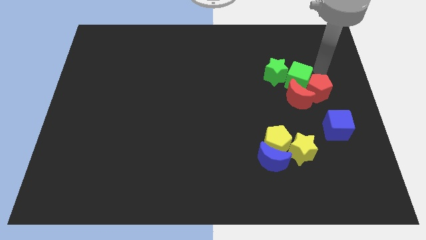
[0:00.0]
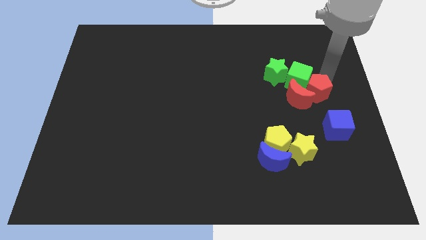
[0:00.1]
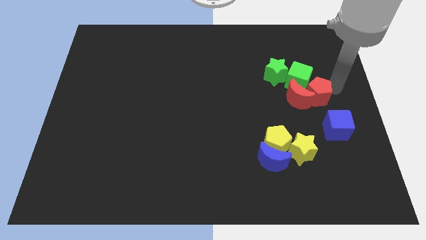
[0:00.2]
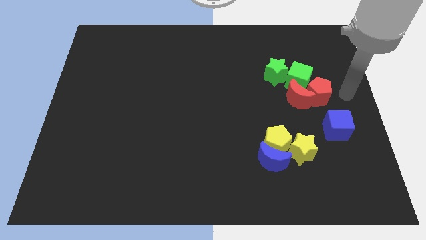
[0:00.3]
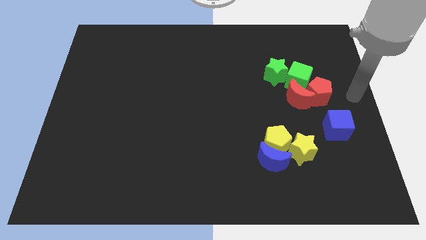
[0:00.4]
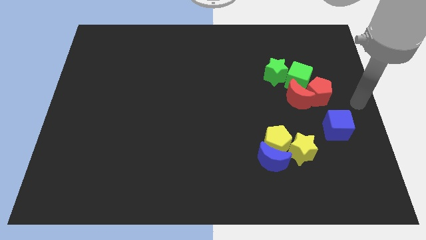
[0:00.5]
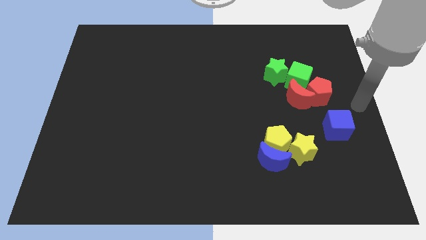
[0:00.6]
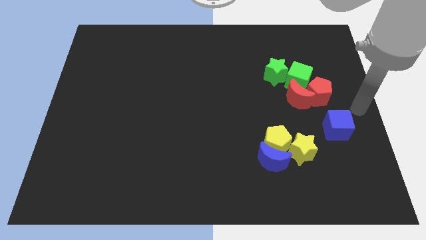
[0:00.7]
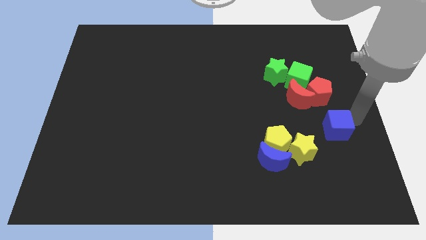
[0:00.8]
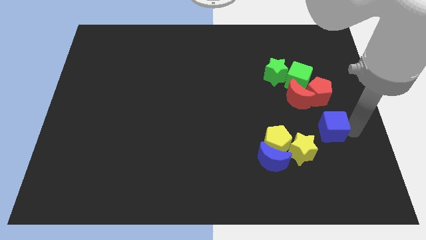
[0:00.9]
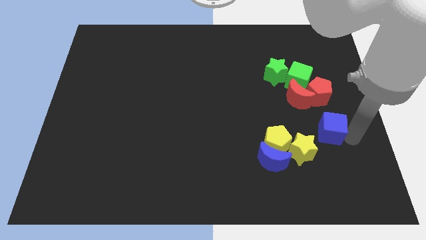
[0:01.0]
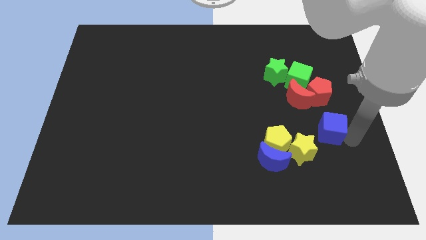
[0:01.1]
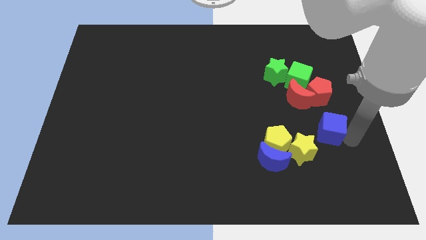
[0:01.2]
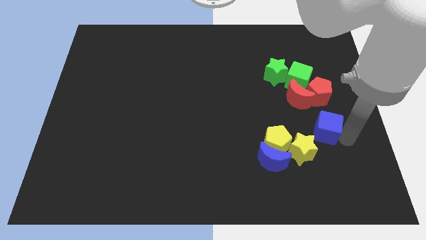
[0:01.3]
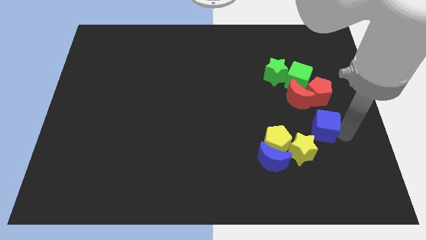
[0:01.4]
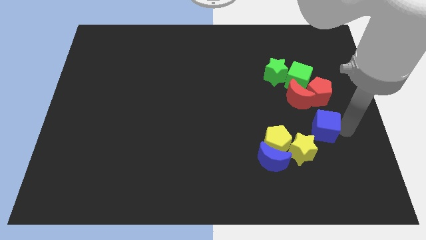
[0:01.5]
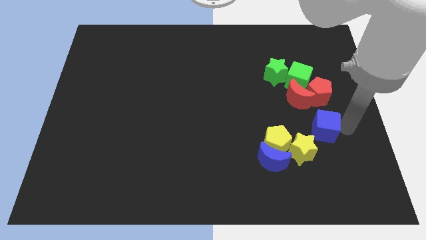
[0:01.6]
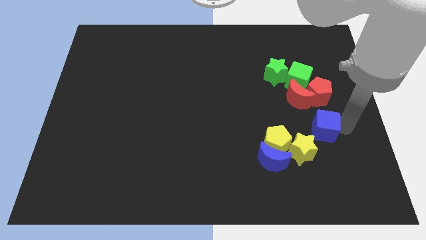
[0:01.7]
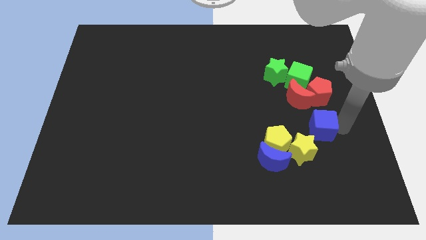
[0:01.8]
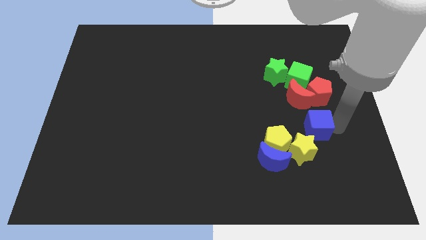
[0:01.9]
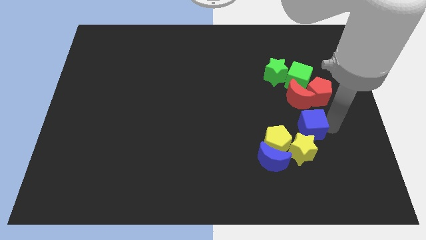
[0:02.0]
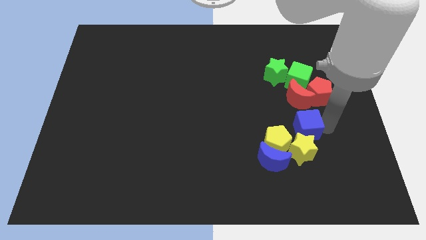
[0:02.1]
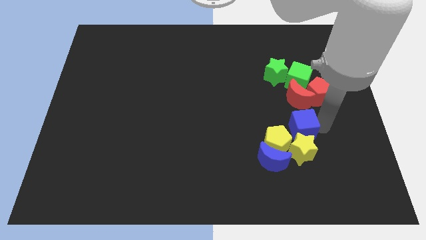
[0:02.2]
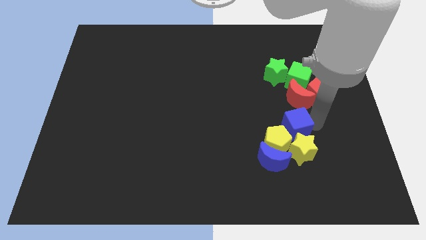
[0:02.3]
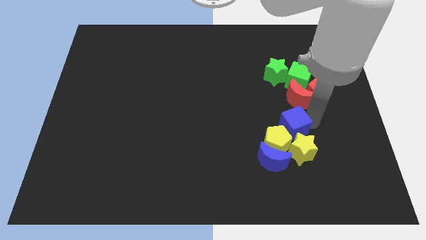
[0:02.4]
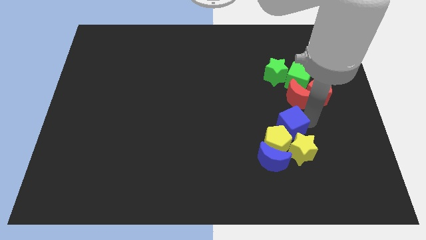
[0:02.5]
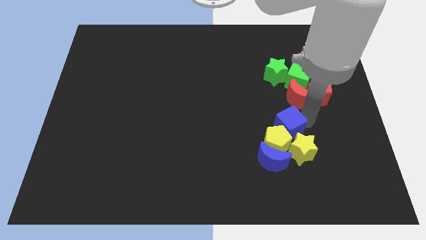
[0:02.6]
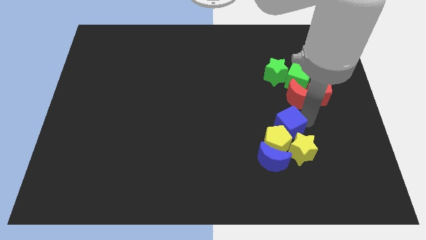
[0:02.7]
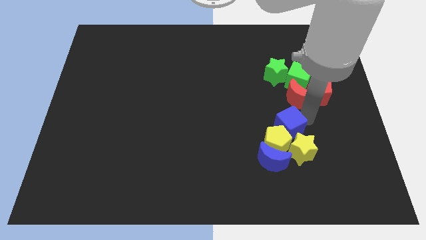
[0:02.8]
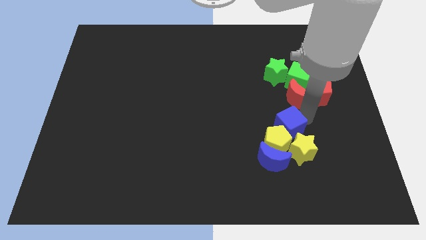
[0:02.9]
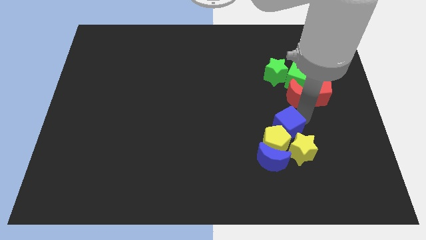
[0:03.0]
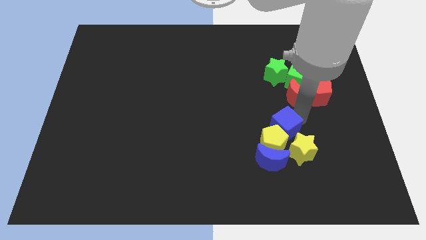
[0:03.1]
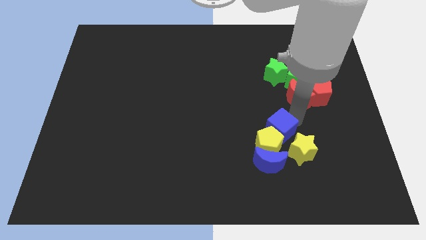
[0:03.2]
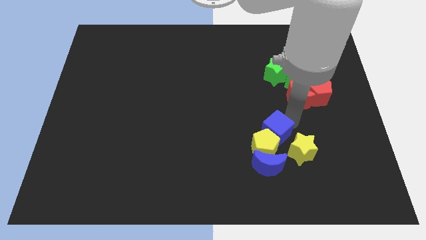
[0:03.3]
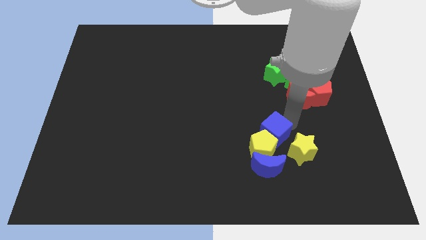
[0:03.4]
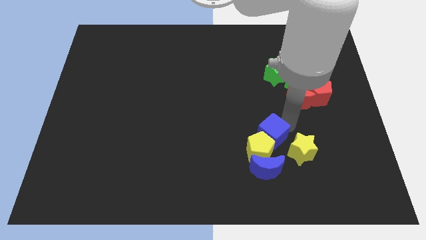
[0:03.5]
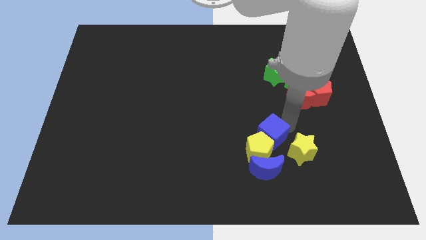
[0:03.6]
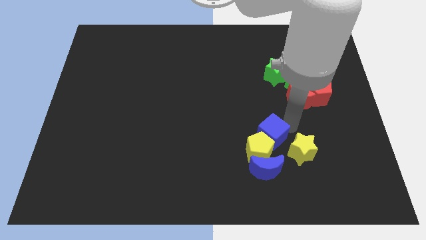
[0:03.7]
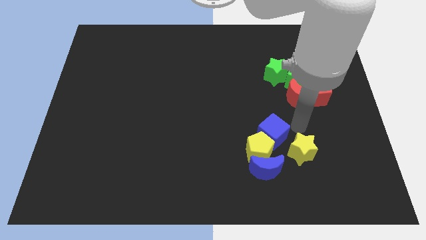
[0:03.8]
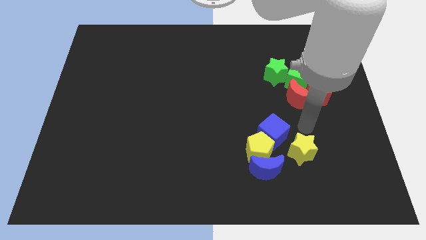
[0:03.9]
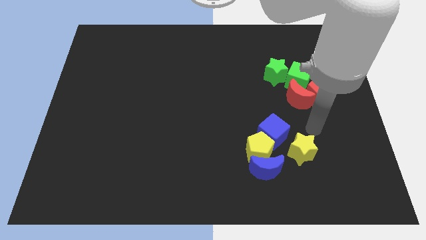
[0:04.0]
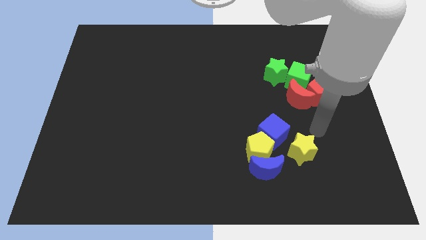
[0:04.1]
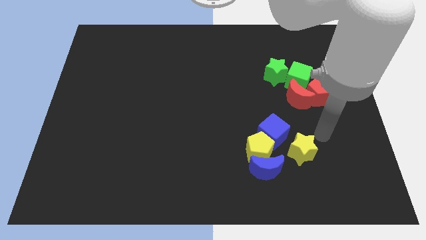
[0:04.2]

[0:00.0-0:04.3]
push the blue cube into the yellow pentagon

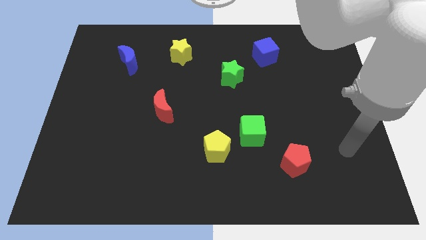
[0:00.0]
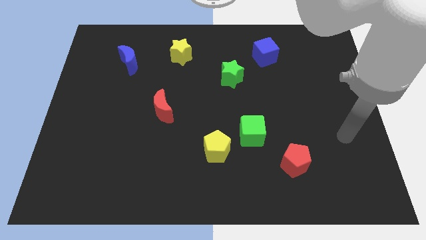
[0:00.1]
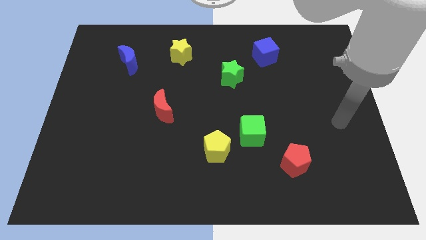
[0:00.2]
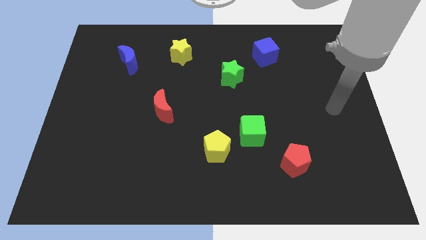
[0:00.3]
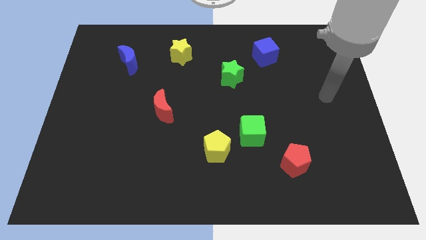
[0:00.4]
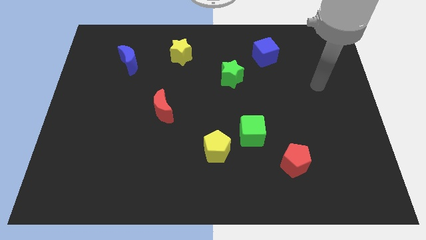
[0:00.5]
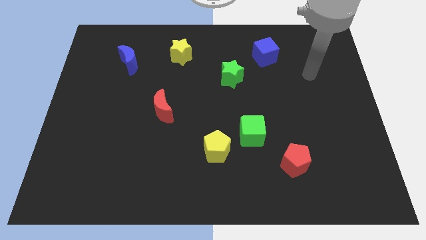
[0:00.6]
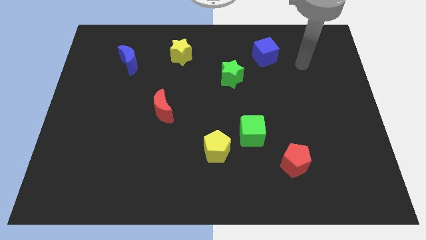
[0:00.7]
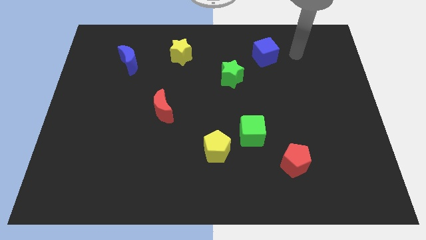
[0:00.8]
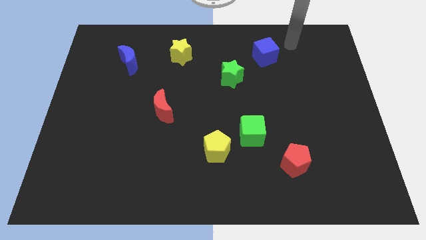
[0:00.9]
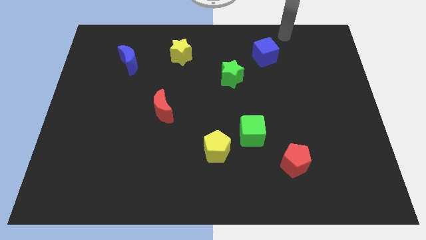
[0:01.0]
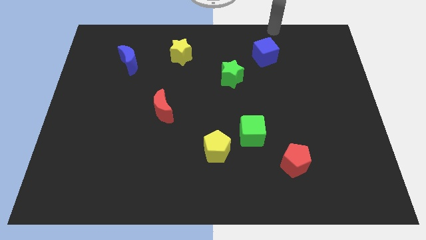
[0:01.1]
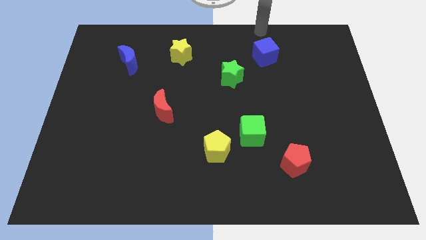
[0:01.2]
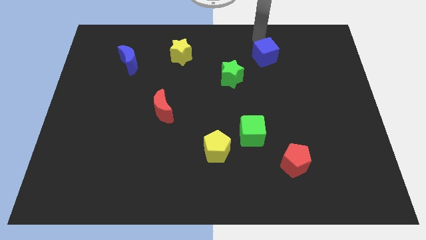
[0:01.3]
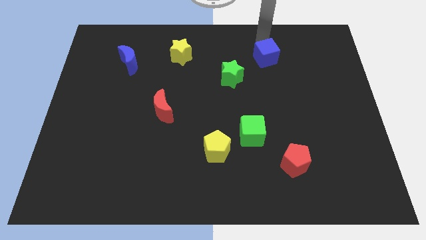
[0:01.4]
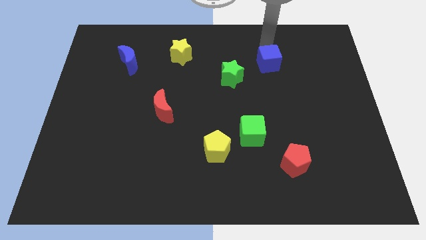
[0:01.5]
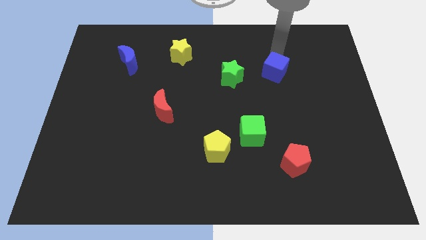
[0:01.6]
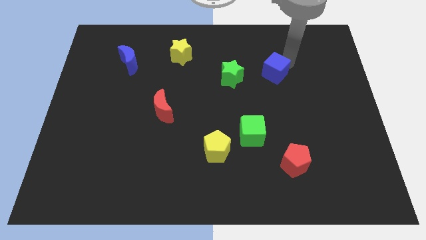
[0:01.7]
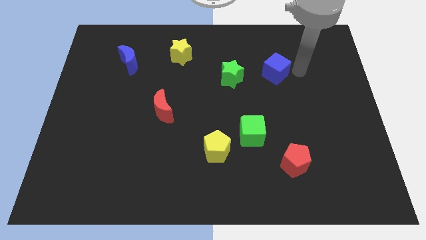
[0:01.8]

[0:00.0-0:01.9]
push the blue cube slightly to the bottom

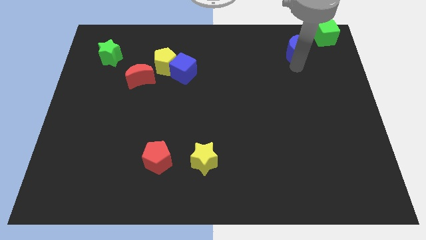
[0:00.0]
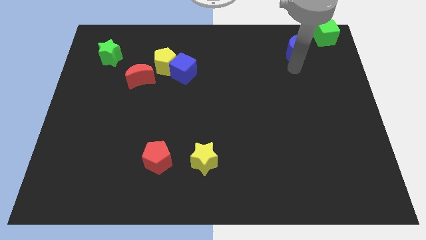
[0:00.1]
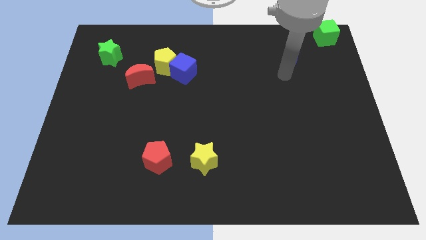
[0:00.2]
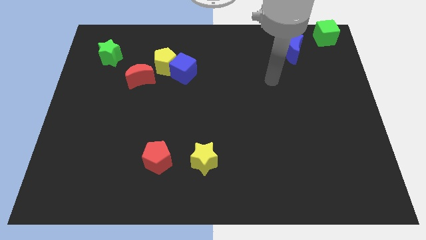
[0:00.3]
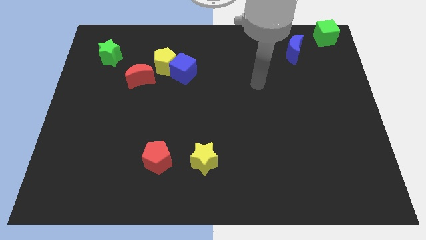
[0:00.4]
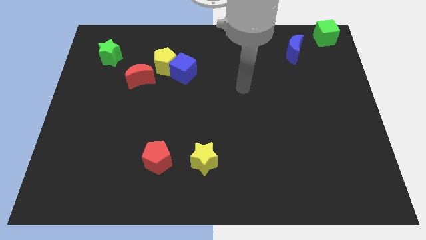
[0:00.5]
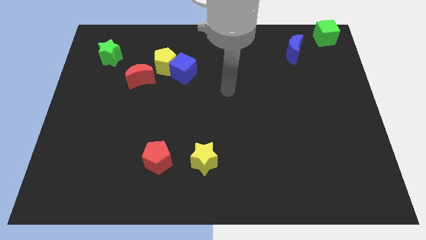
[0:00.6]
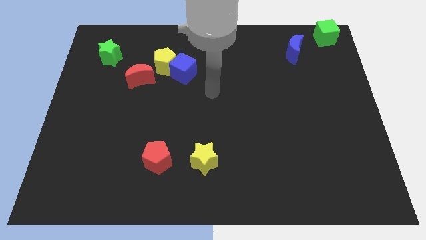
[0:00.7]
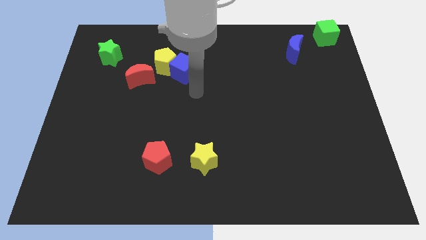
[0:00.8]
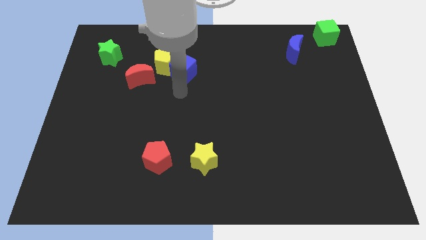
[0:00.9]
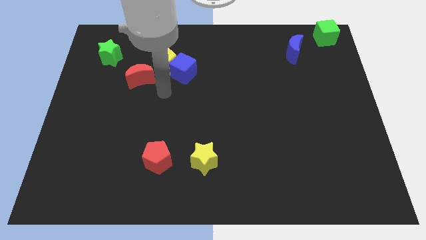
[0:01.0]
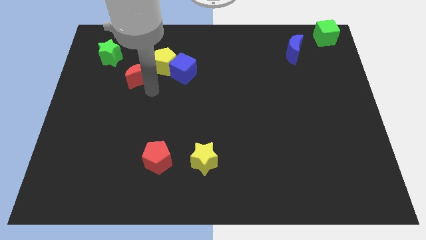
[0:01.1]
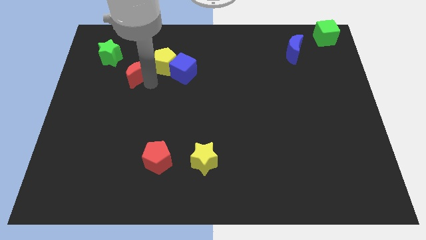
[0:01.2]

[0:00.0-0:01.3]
move your arm away from the blue moon

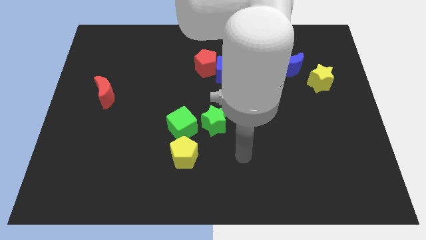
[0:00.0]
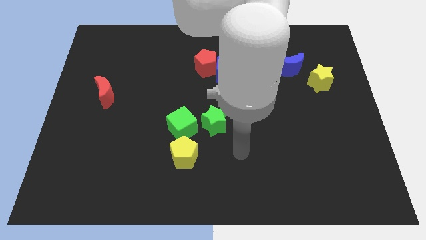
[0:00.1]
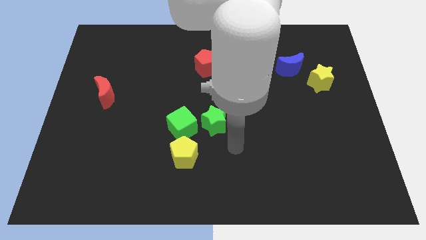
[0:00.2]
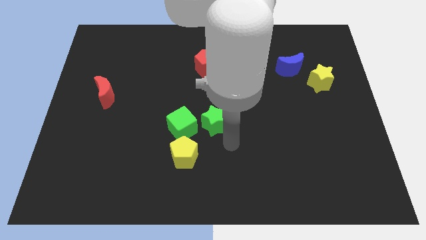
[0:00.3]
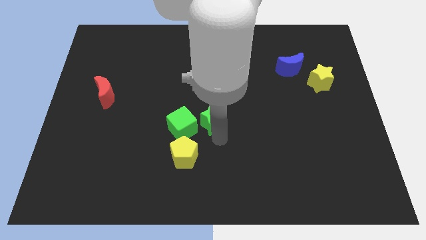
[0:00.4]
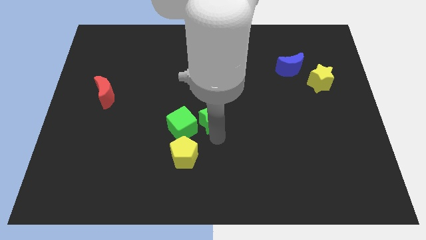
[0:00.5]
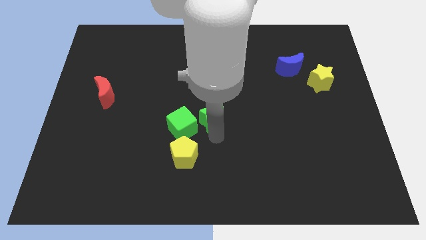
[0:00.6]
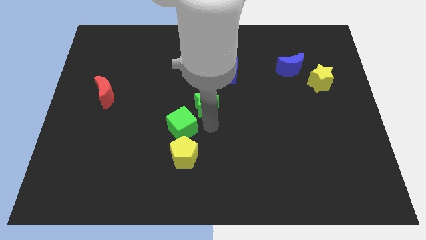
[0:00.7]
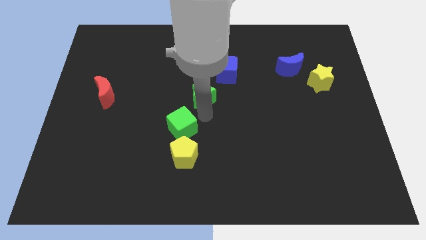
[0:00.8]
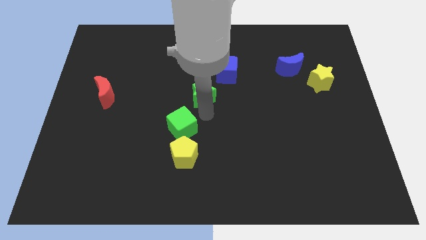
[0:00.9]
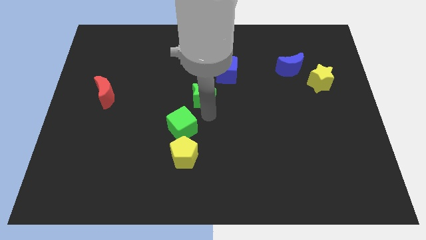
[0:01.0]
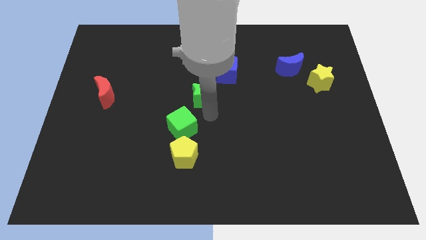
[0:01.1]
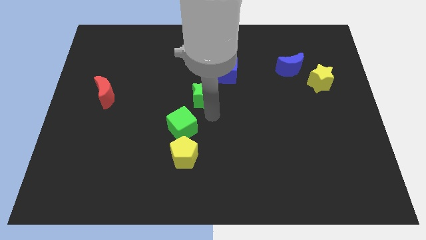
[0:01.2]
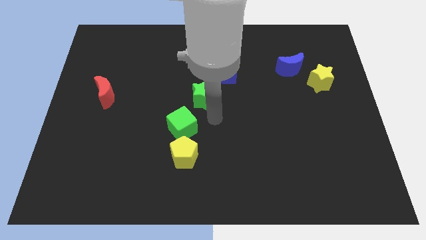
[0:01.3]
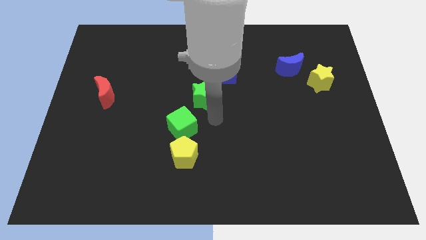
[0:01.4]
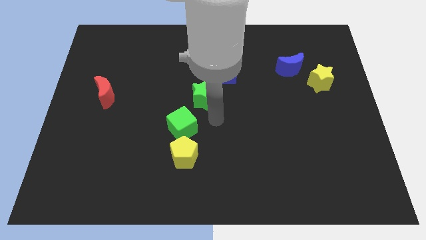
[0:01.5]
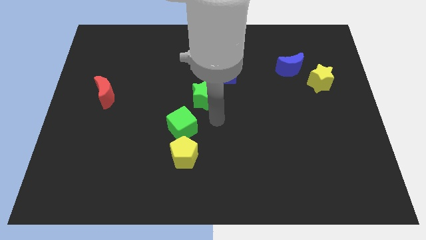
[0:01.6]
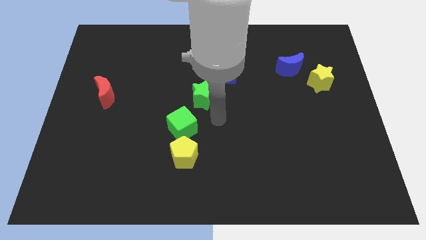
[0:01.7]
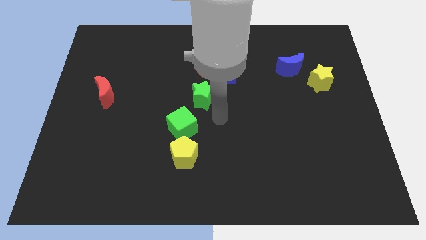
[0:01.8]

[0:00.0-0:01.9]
place the green star at the bottom left of the blue cube
